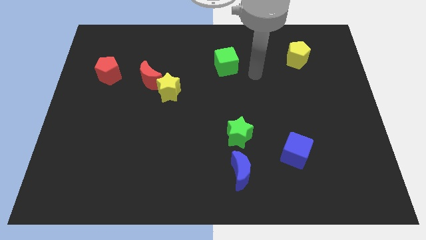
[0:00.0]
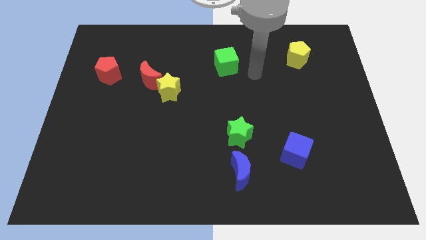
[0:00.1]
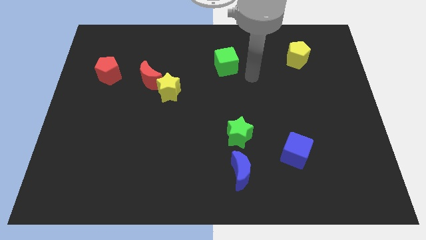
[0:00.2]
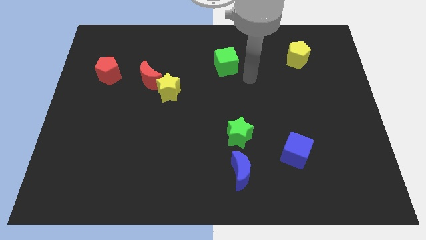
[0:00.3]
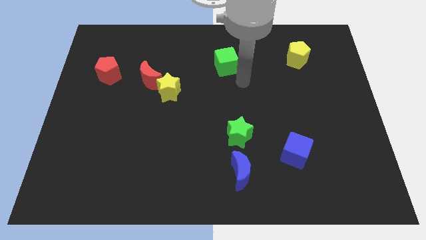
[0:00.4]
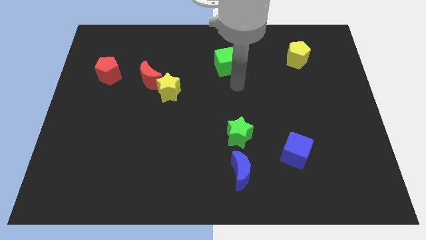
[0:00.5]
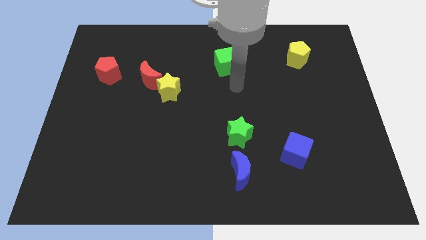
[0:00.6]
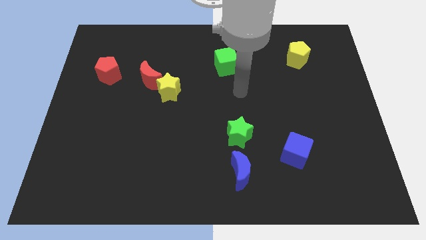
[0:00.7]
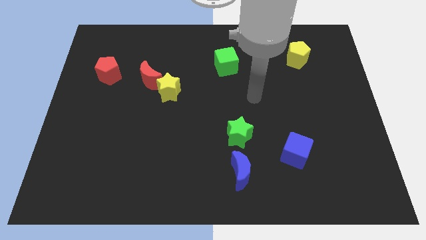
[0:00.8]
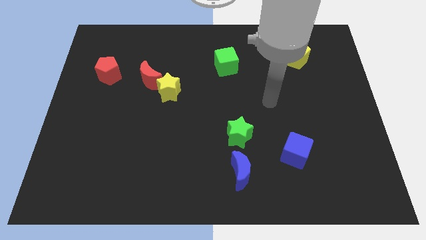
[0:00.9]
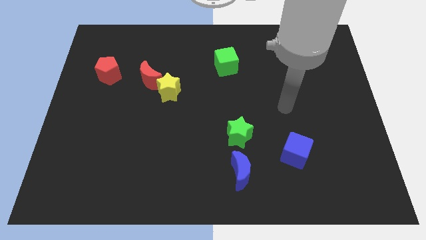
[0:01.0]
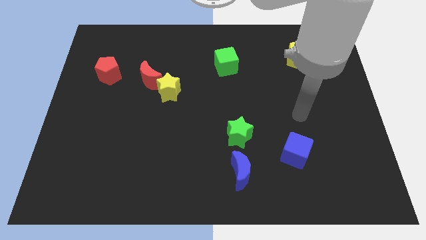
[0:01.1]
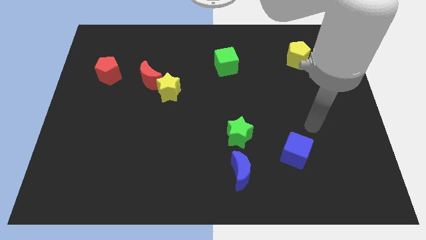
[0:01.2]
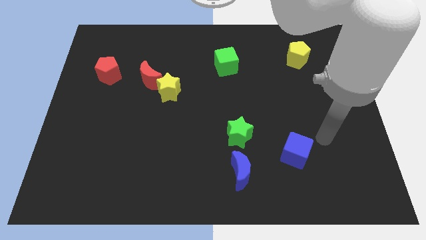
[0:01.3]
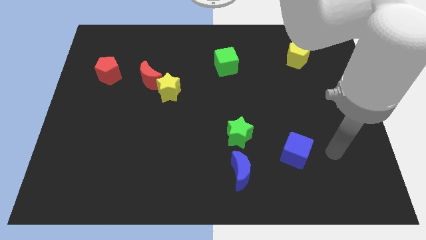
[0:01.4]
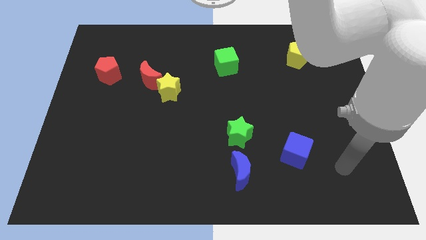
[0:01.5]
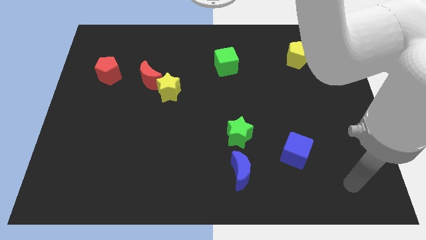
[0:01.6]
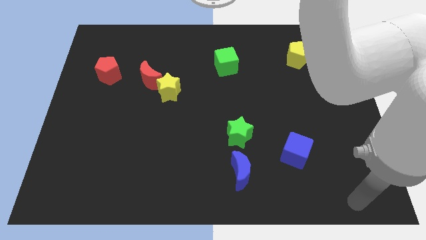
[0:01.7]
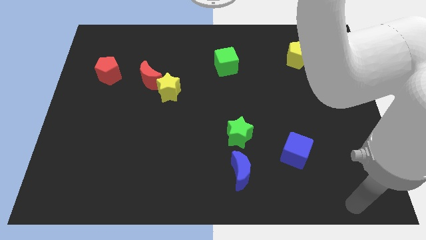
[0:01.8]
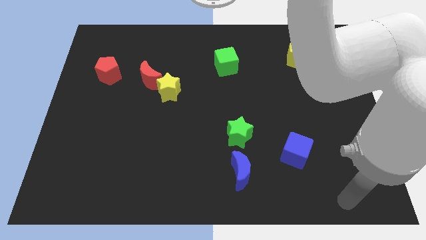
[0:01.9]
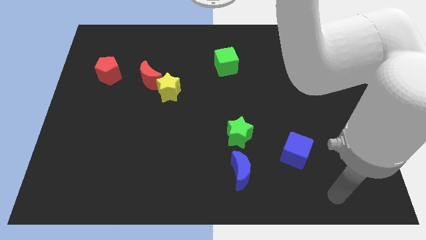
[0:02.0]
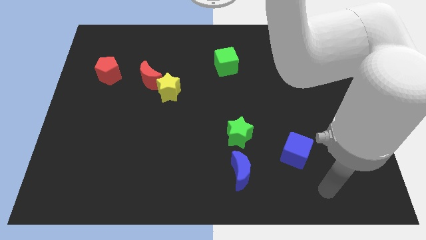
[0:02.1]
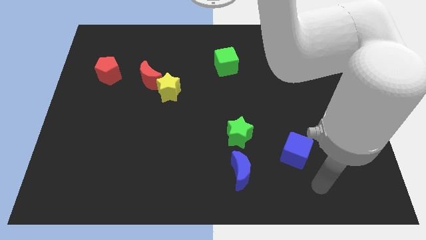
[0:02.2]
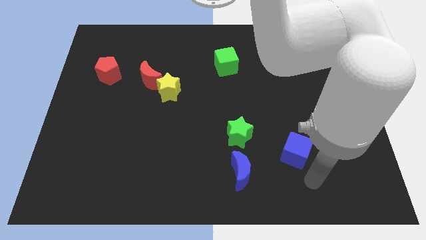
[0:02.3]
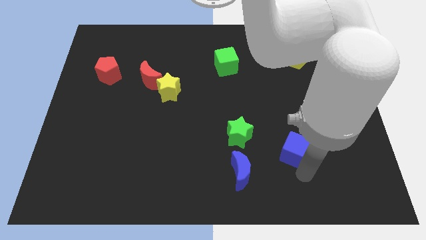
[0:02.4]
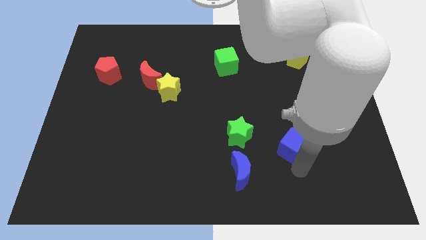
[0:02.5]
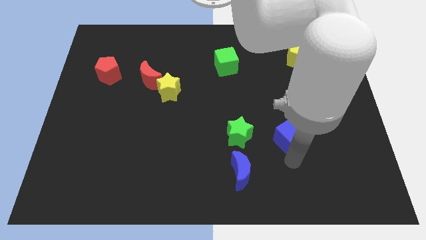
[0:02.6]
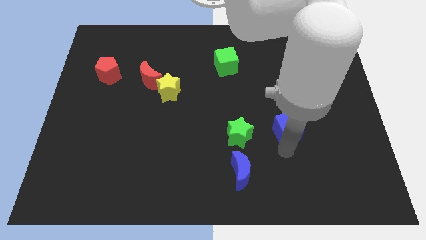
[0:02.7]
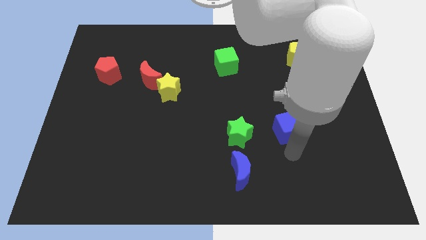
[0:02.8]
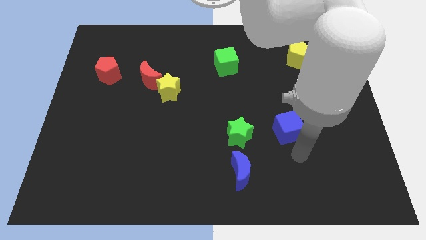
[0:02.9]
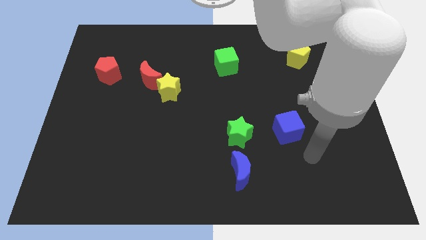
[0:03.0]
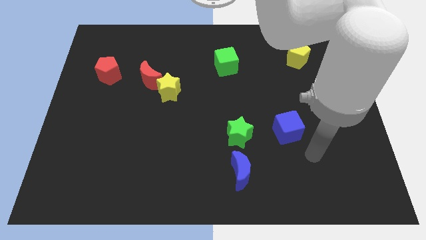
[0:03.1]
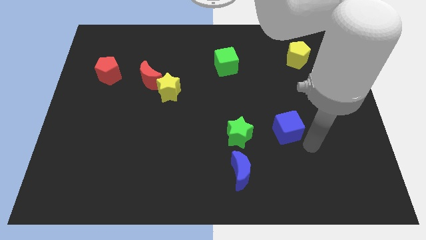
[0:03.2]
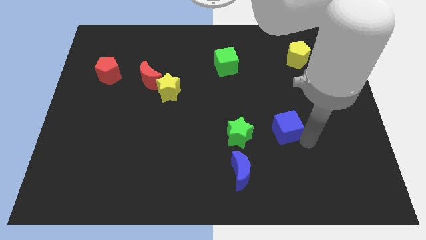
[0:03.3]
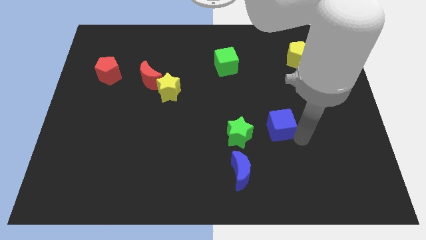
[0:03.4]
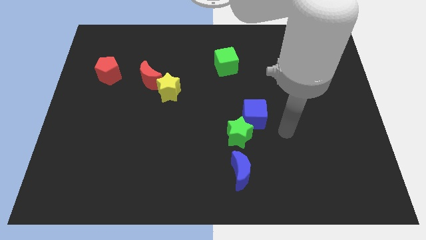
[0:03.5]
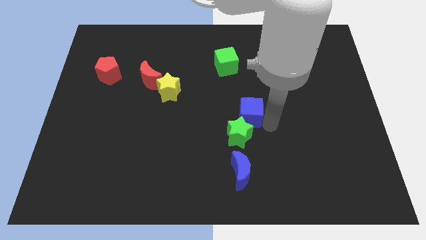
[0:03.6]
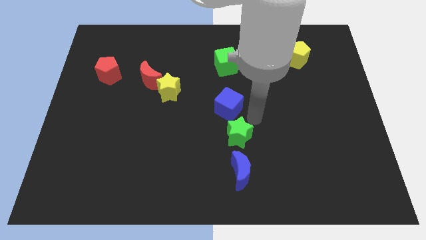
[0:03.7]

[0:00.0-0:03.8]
place the blue cube into the center

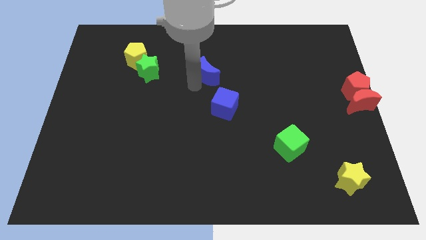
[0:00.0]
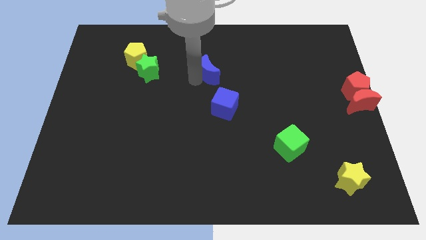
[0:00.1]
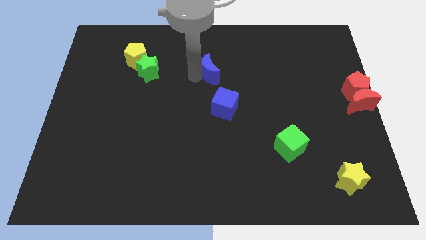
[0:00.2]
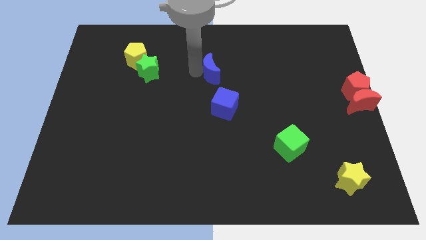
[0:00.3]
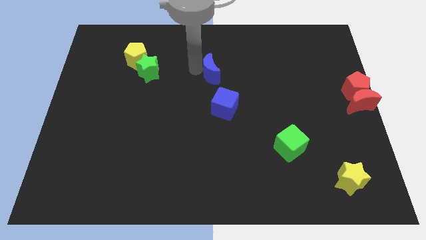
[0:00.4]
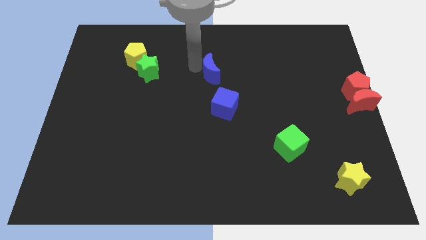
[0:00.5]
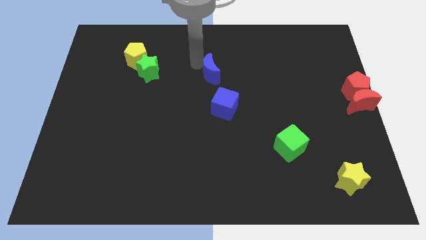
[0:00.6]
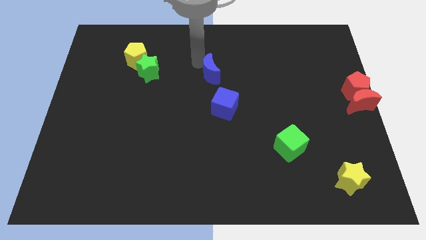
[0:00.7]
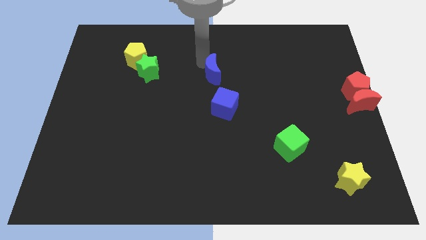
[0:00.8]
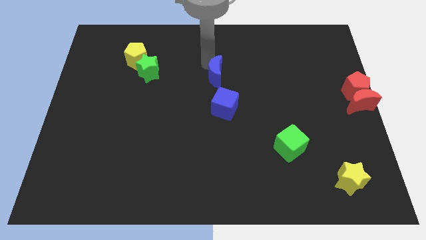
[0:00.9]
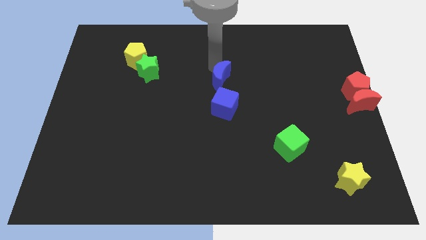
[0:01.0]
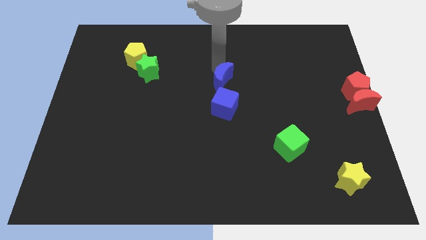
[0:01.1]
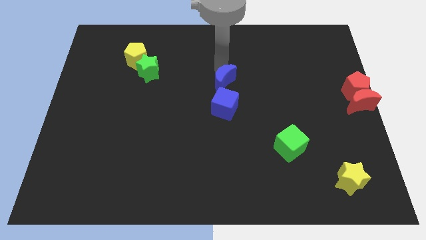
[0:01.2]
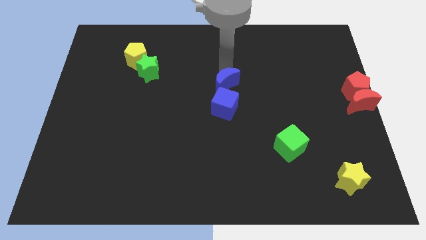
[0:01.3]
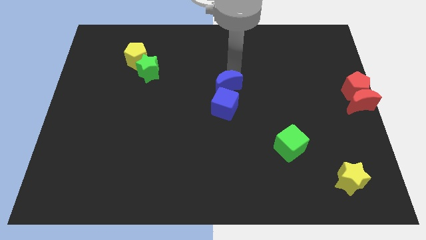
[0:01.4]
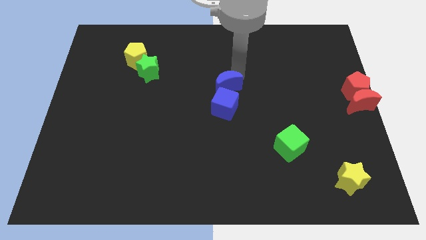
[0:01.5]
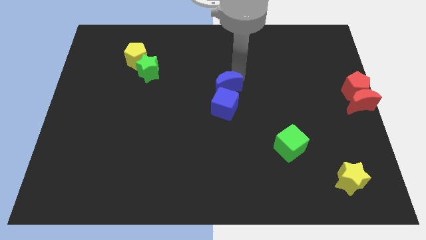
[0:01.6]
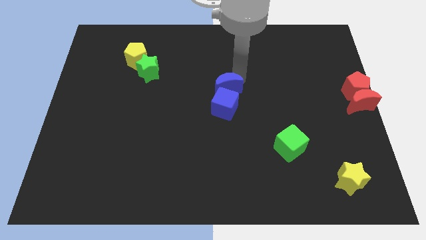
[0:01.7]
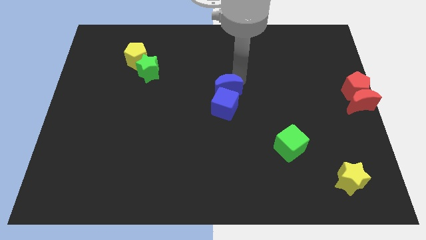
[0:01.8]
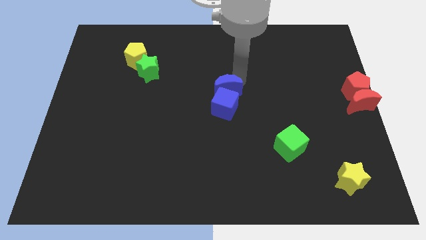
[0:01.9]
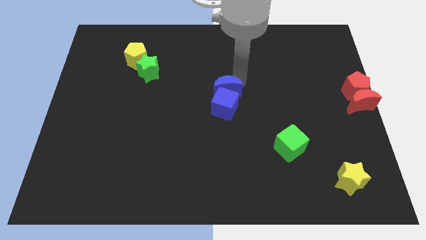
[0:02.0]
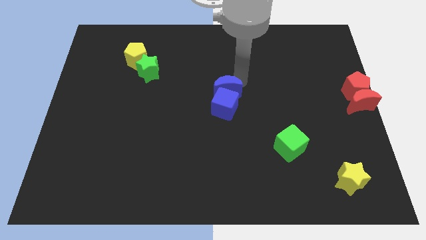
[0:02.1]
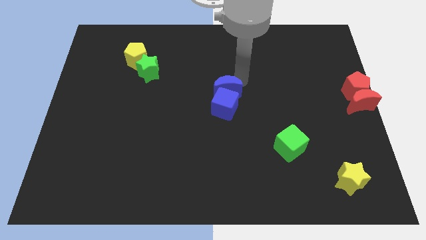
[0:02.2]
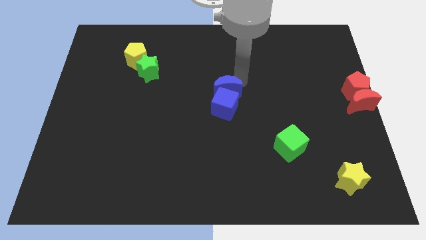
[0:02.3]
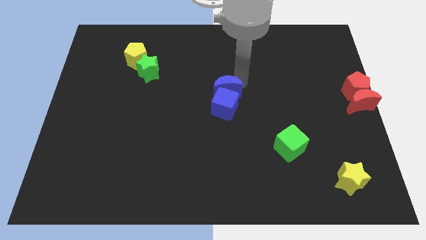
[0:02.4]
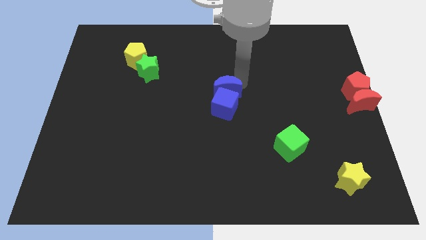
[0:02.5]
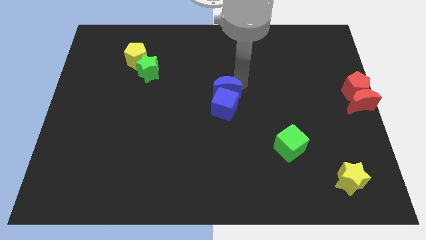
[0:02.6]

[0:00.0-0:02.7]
place the blue blocks at the center of the board

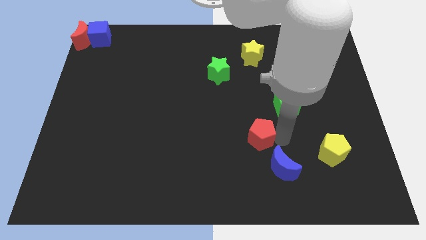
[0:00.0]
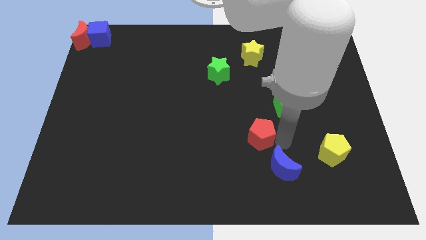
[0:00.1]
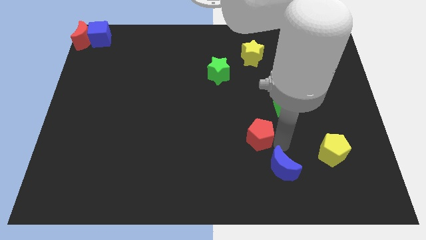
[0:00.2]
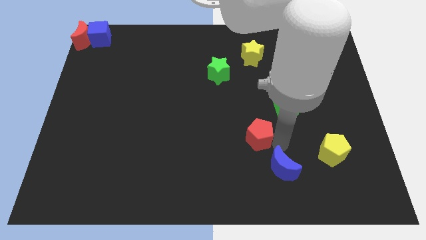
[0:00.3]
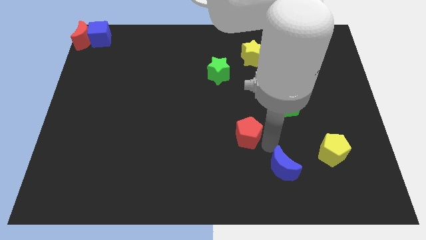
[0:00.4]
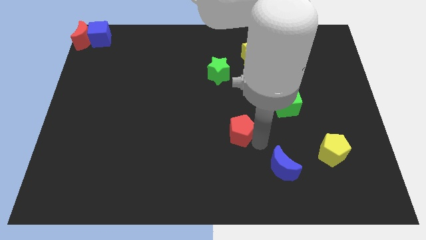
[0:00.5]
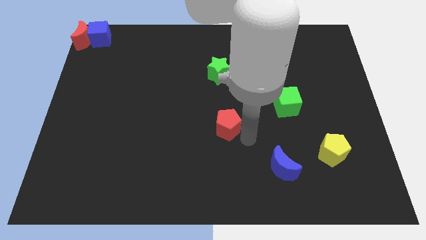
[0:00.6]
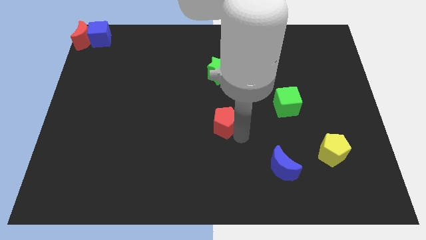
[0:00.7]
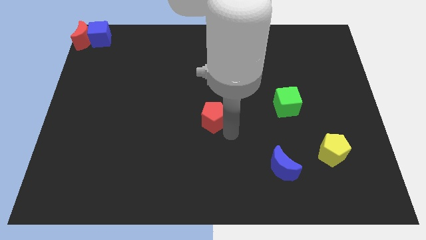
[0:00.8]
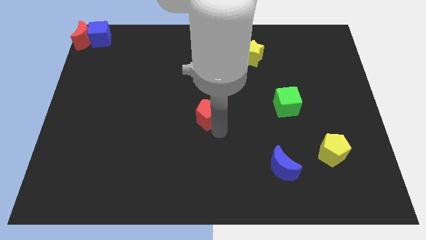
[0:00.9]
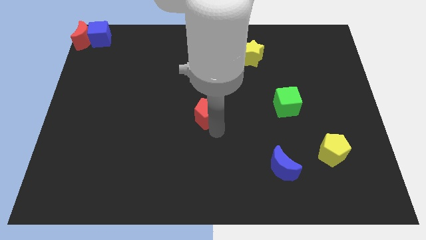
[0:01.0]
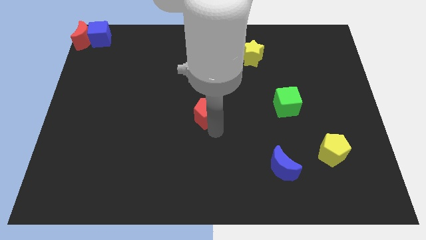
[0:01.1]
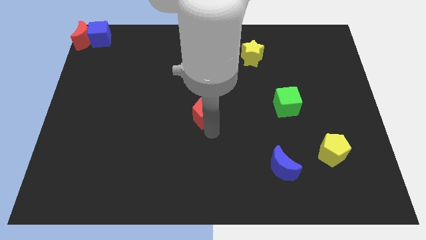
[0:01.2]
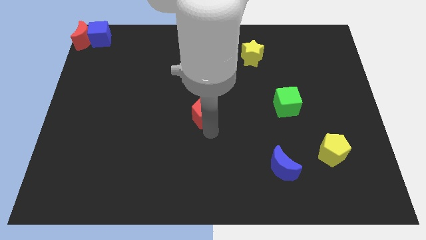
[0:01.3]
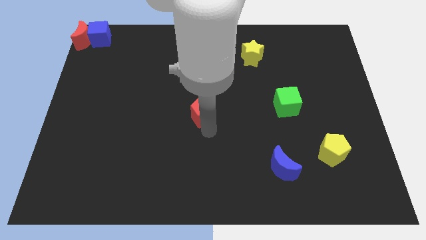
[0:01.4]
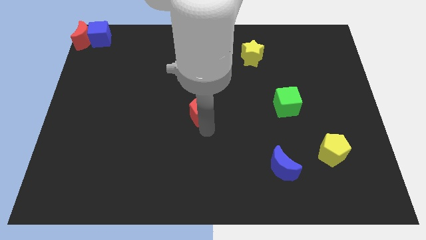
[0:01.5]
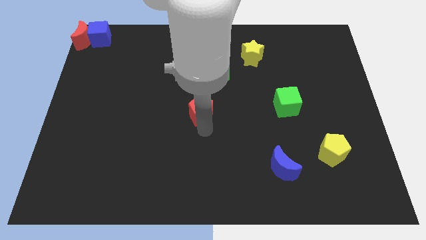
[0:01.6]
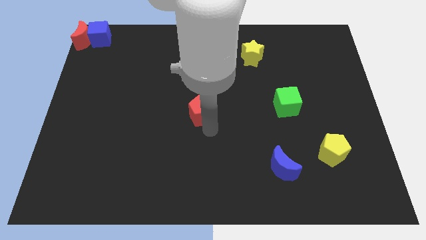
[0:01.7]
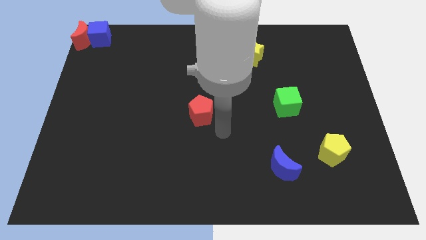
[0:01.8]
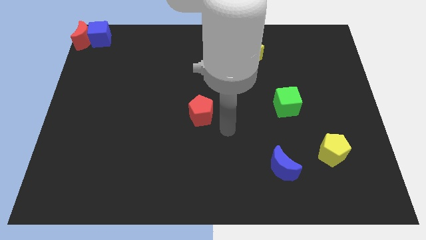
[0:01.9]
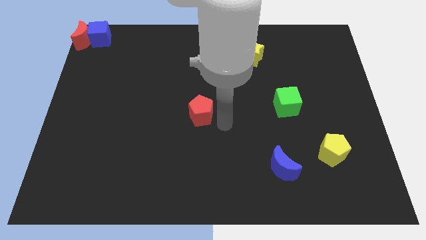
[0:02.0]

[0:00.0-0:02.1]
place red pentagon in the center

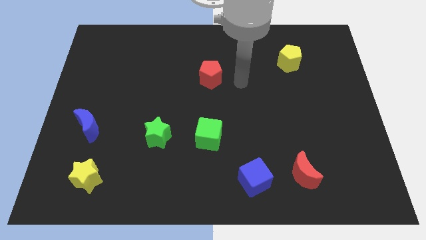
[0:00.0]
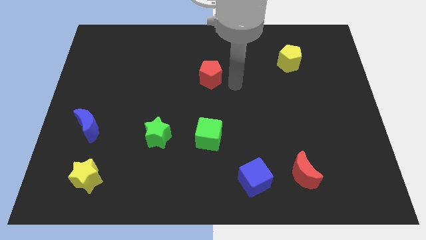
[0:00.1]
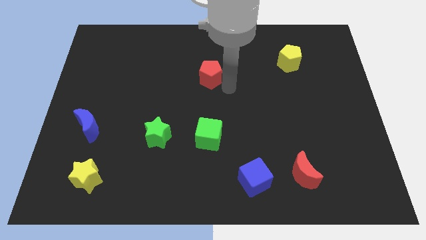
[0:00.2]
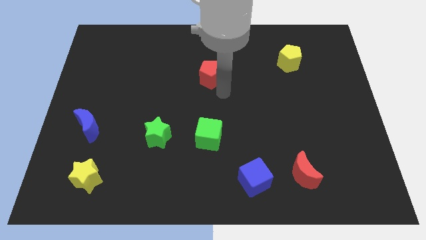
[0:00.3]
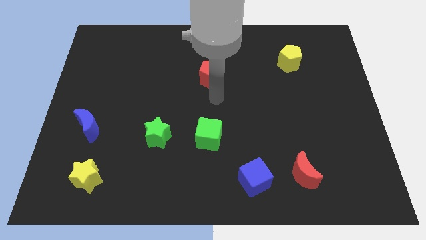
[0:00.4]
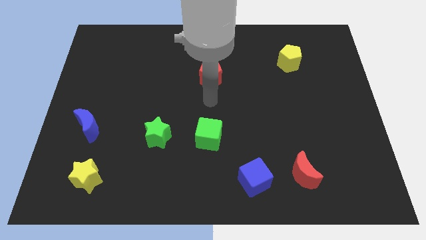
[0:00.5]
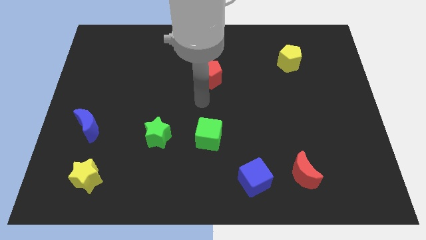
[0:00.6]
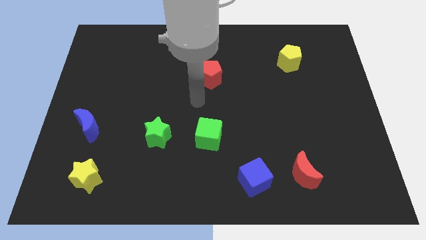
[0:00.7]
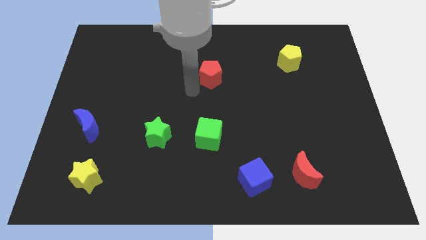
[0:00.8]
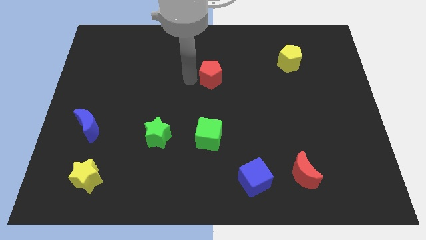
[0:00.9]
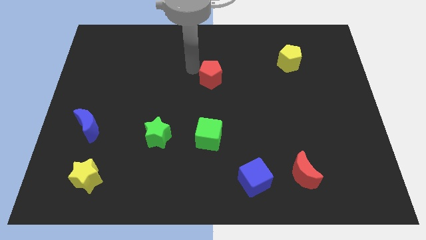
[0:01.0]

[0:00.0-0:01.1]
move your arm to the left side of the red pentagon
